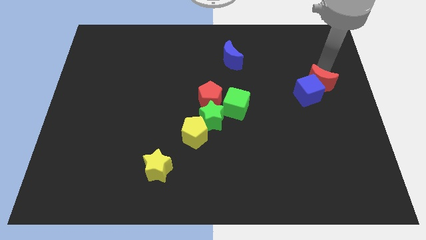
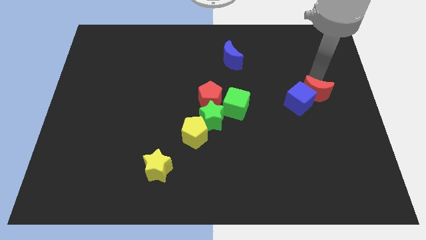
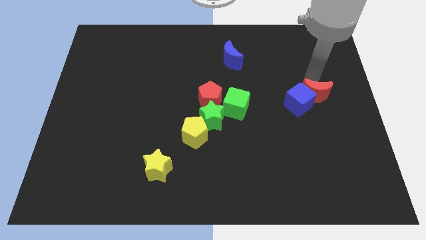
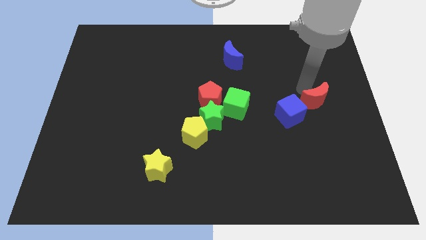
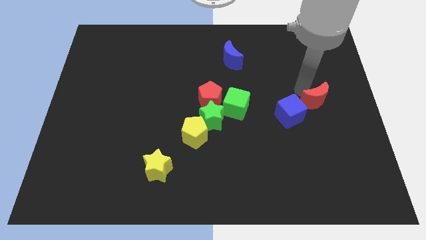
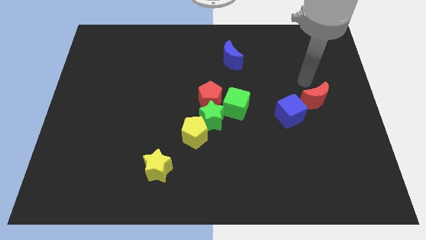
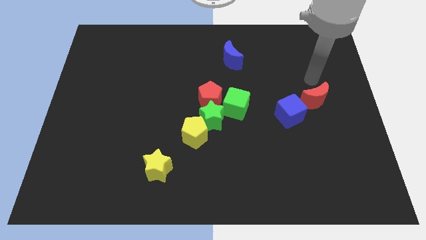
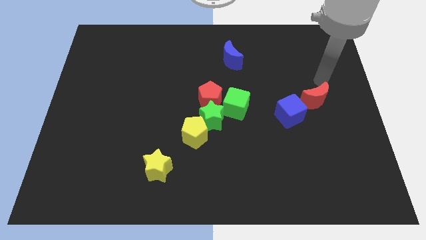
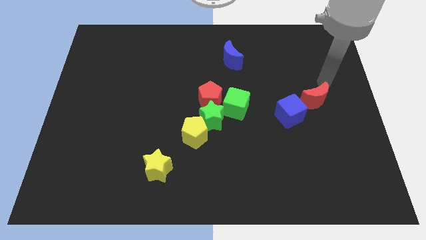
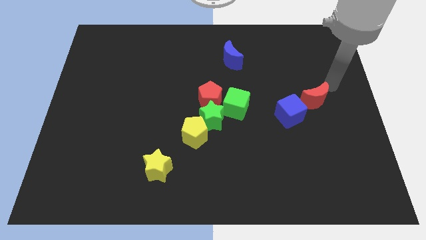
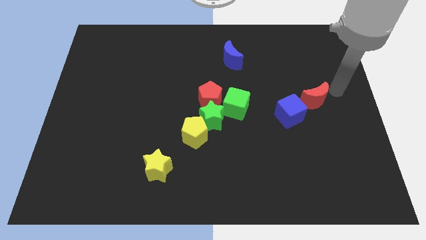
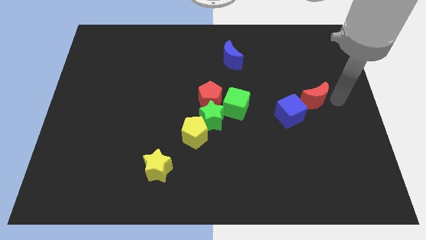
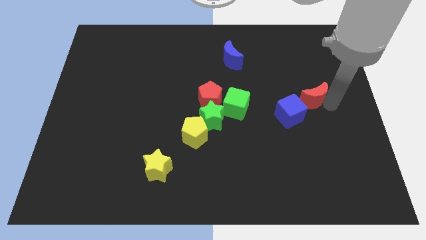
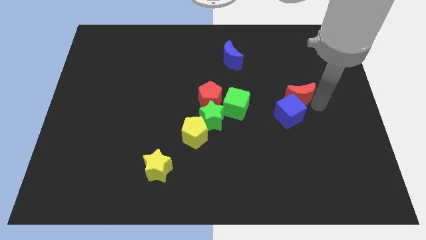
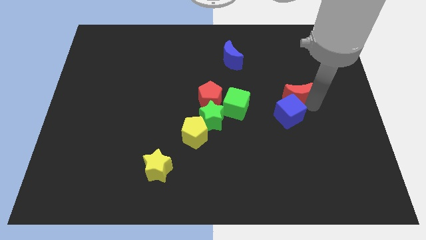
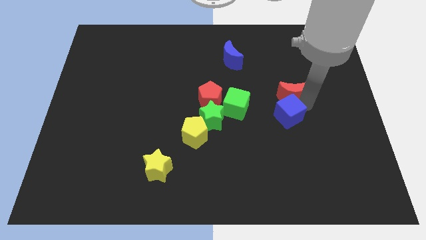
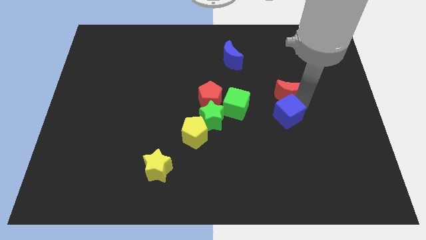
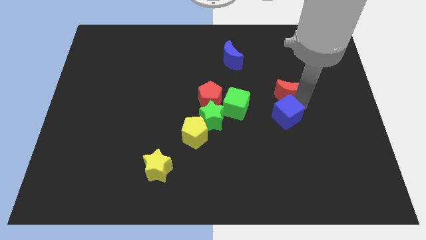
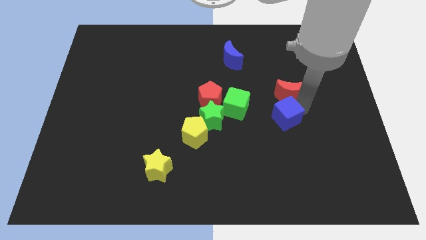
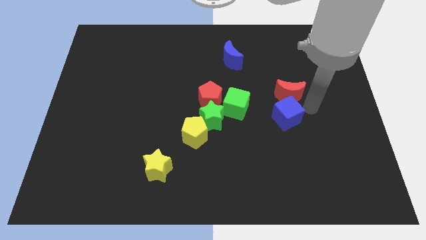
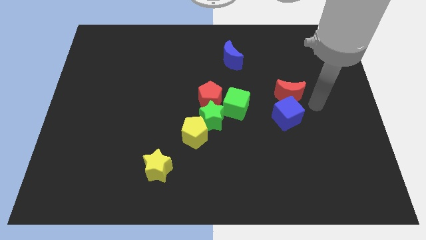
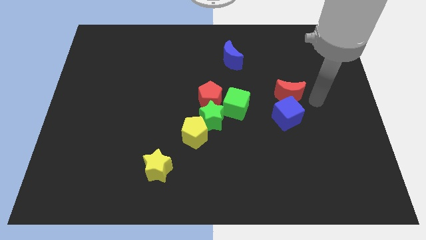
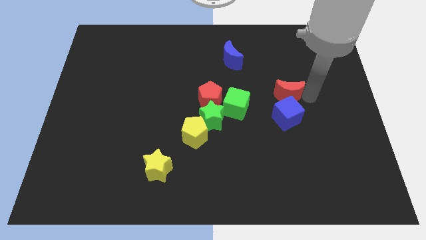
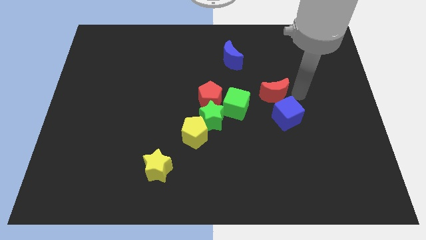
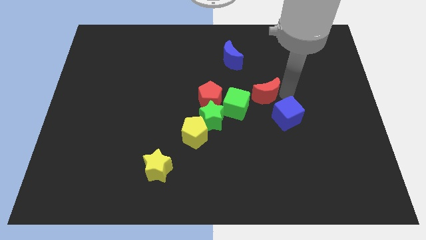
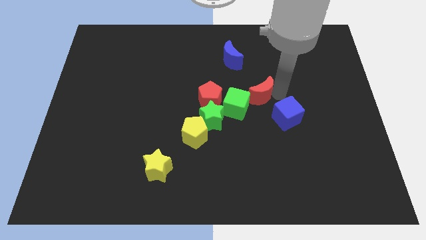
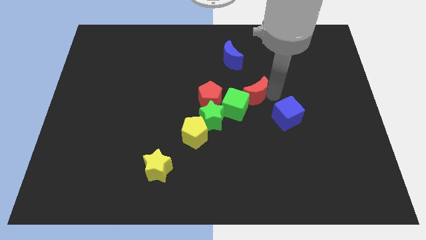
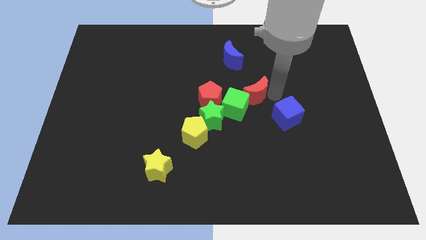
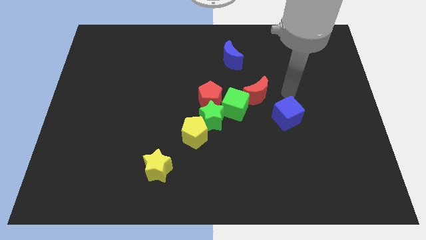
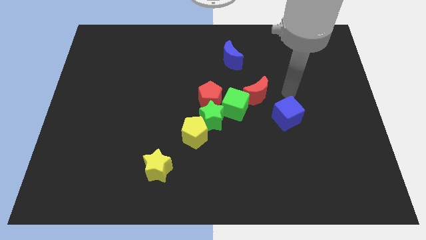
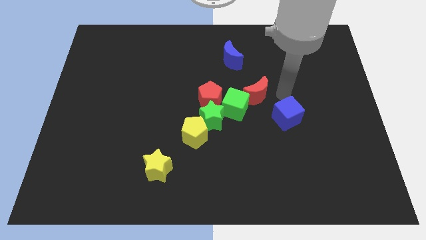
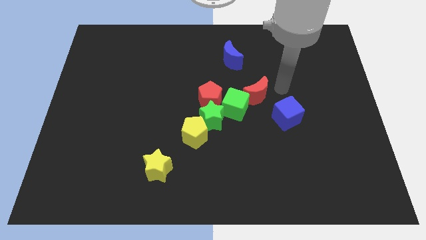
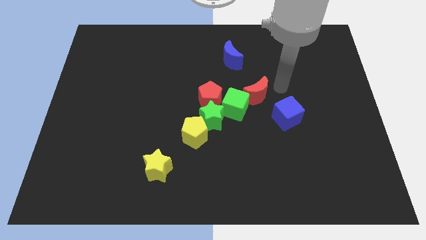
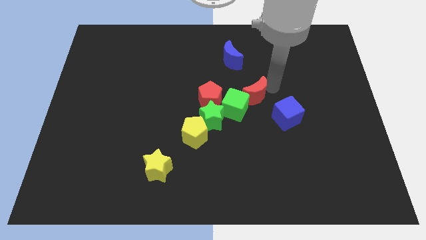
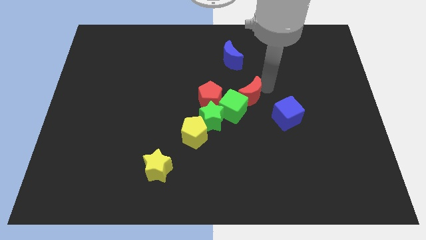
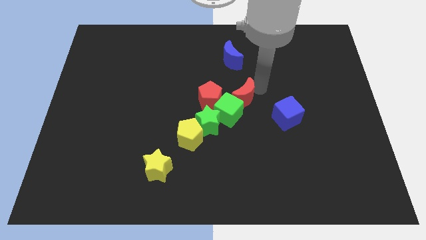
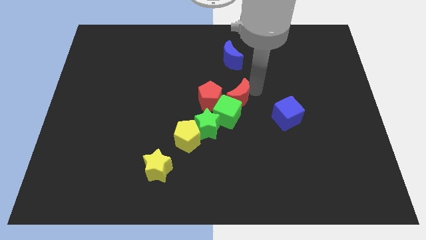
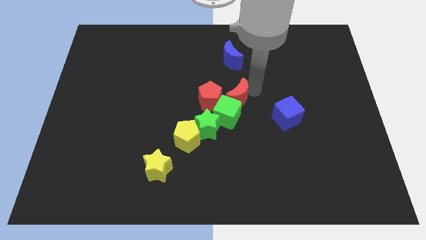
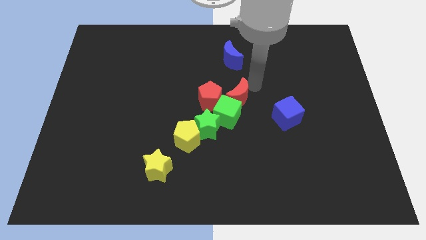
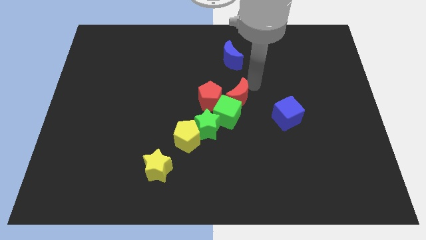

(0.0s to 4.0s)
push the red moon into the group of blocks

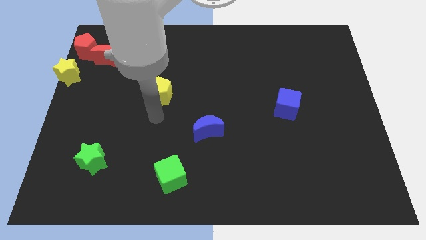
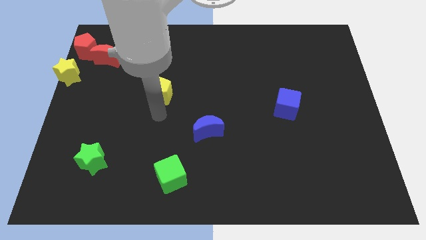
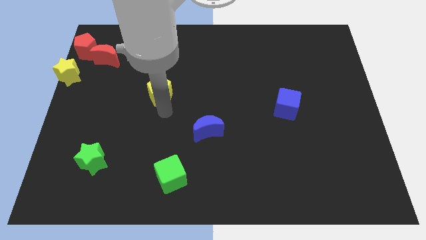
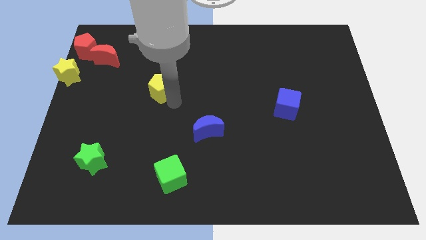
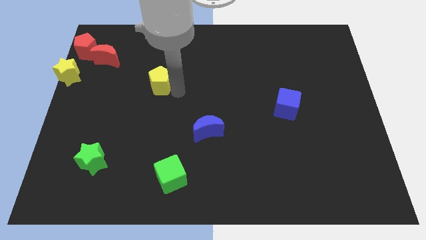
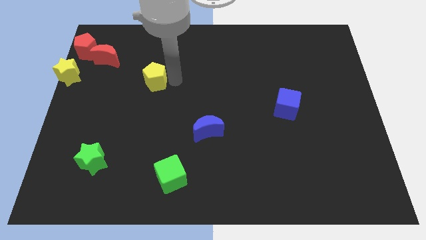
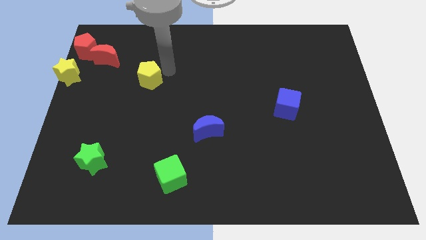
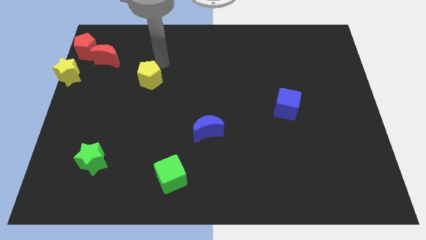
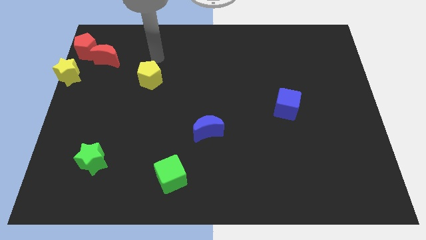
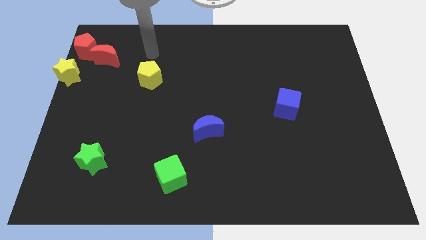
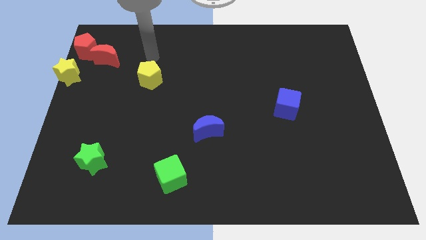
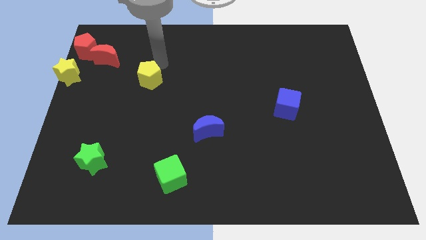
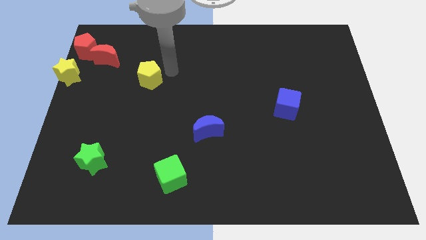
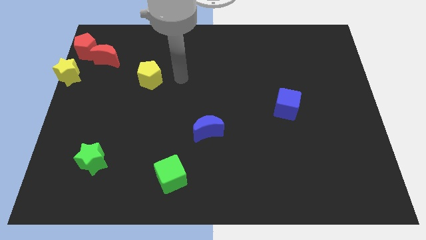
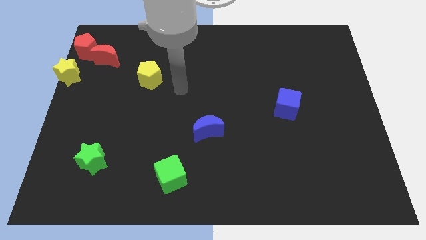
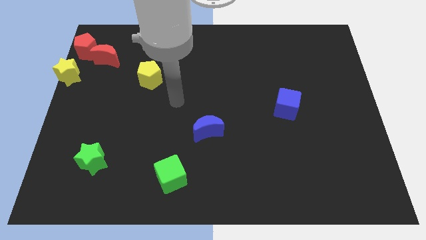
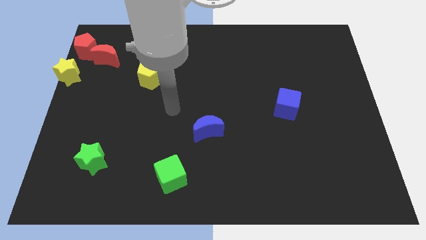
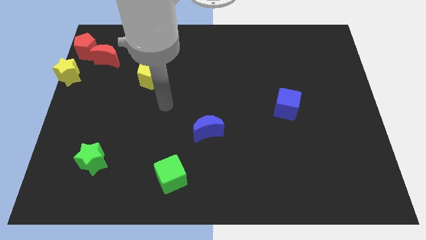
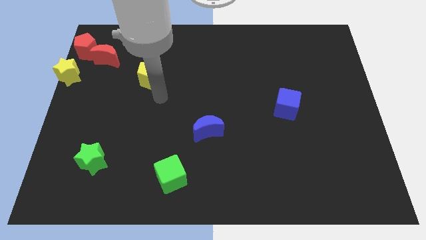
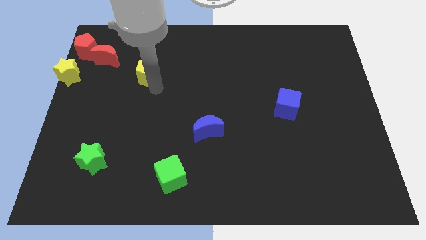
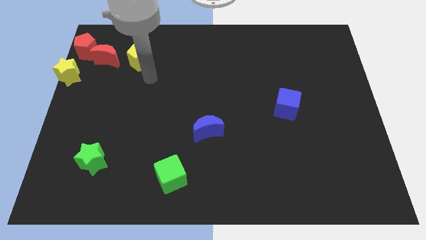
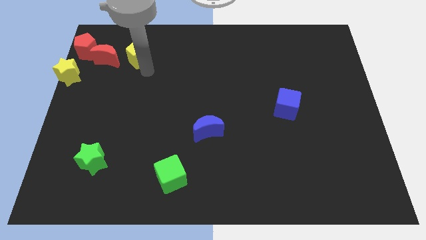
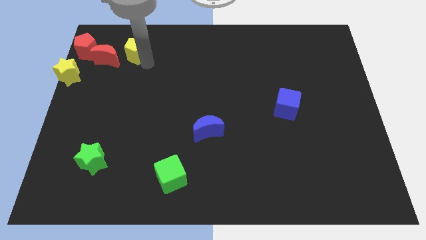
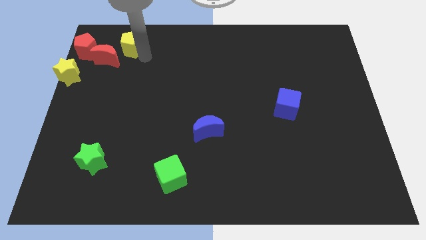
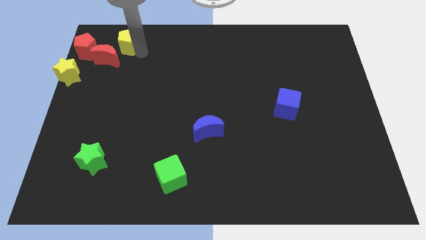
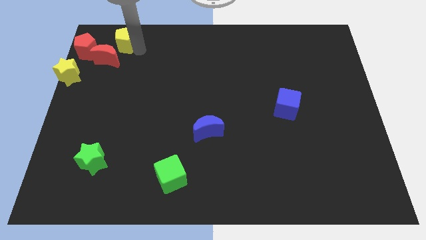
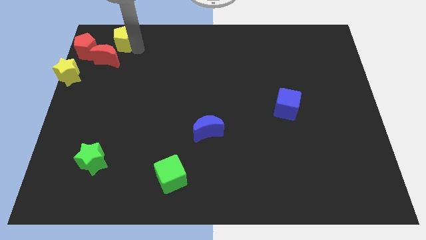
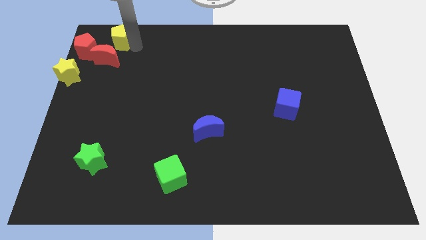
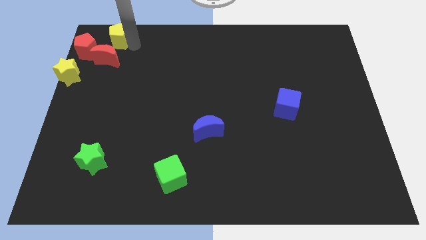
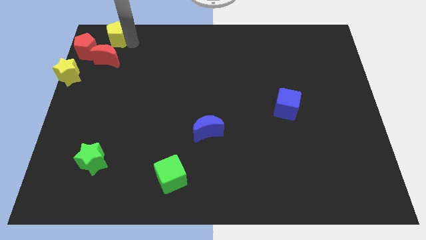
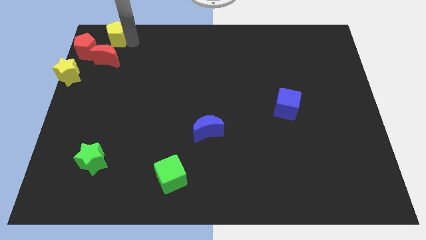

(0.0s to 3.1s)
push the yellow pentagon on the top side of the red crescent

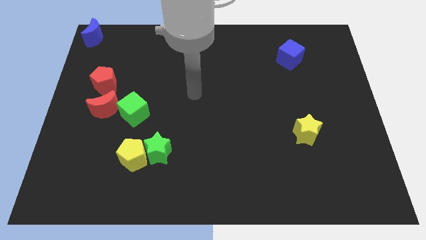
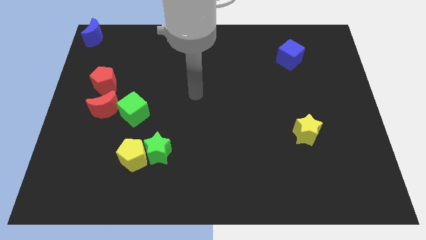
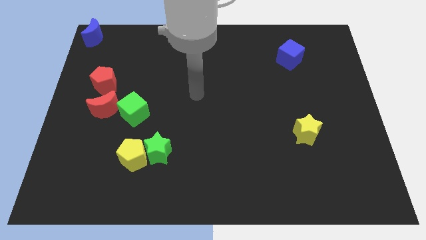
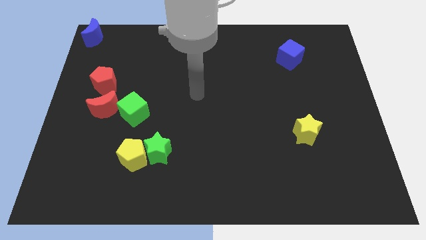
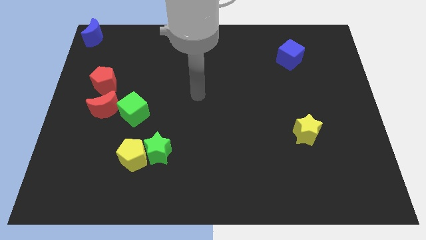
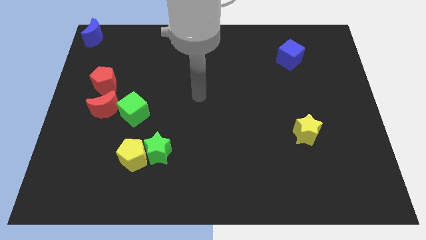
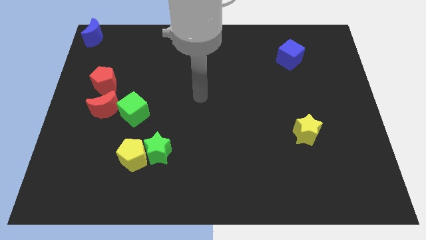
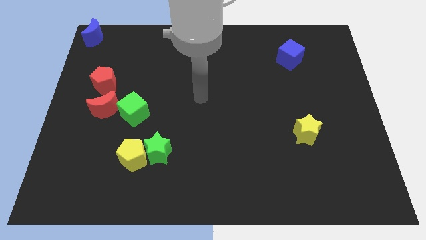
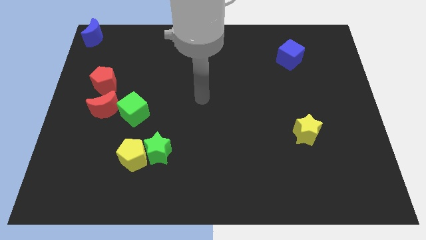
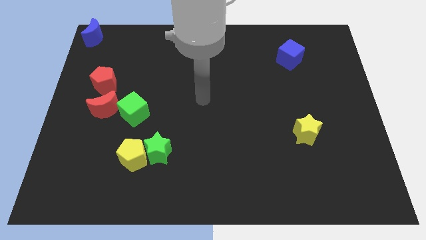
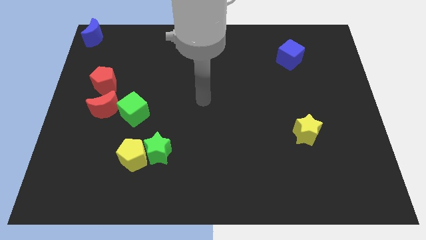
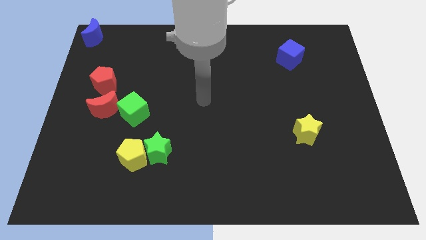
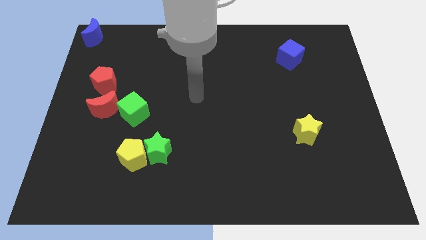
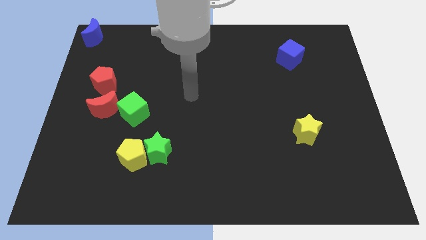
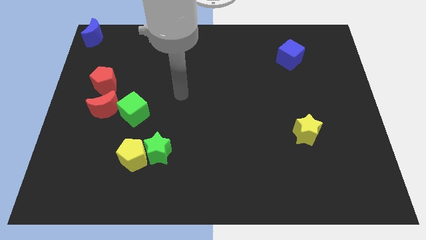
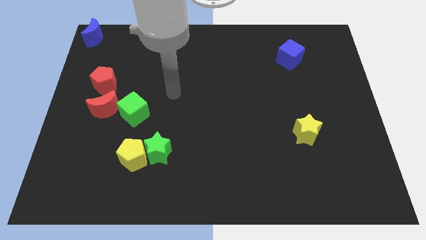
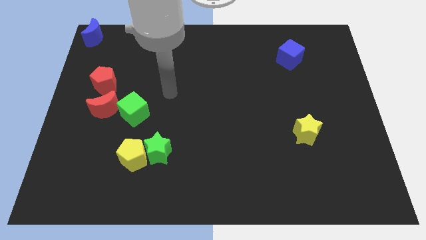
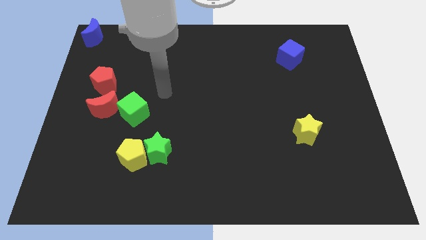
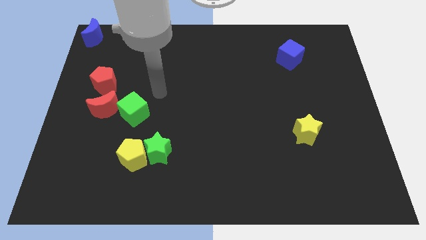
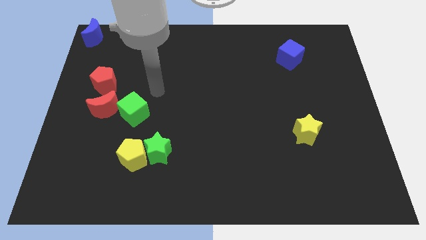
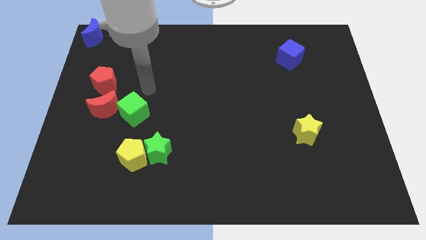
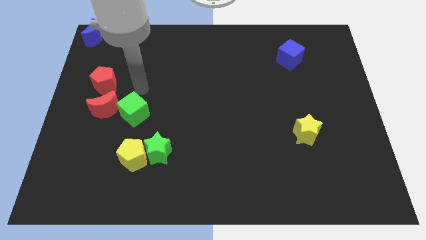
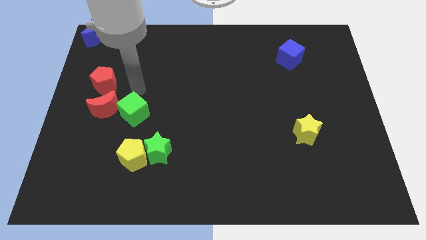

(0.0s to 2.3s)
point your hand above the green cube
